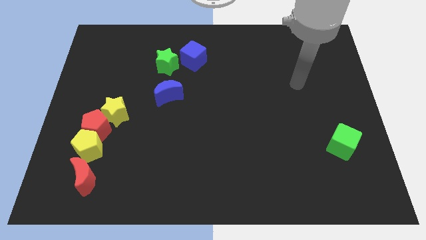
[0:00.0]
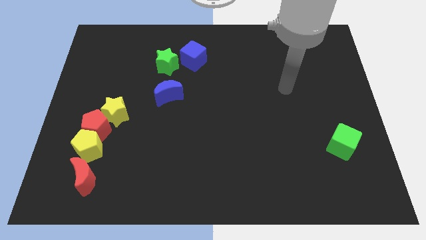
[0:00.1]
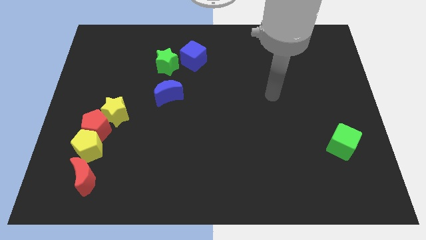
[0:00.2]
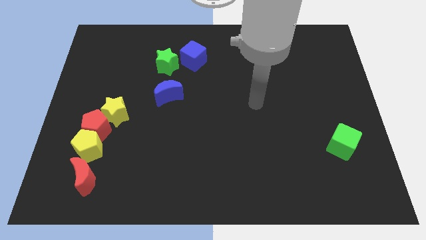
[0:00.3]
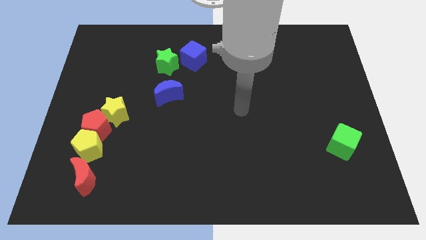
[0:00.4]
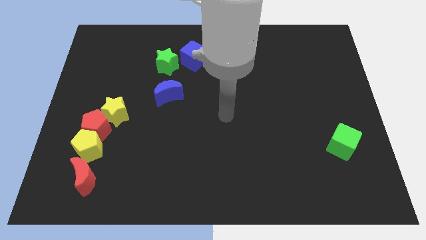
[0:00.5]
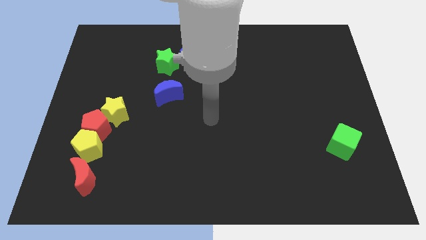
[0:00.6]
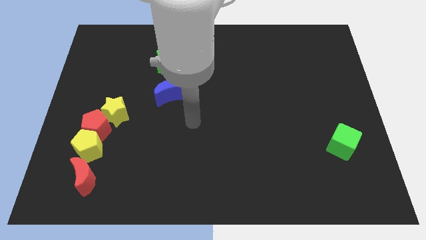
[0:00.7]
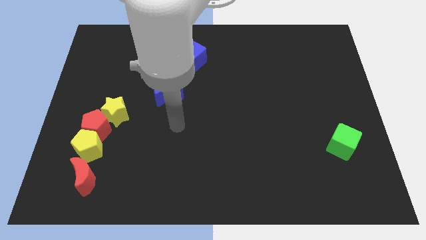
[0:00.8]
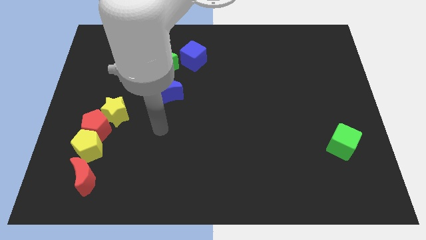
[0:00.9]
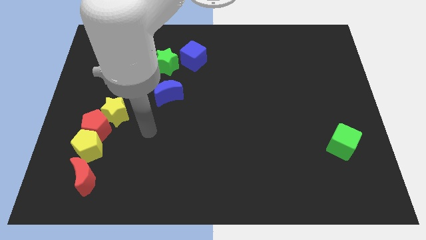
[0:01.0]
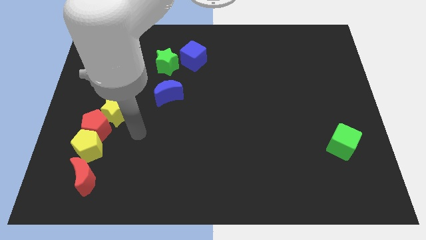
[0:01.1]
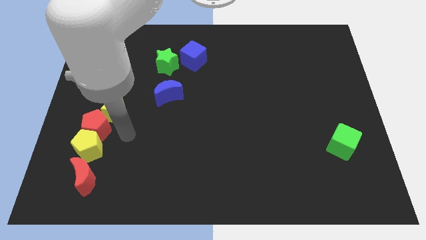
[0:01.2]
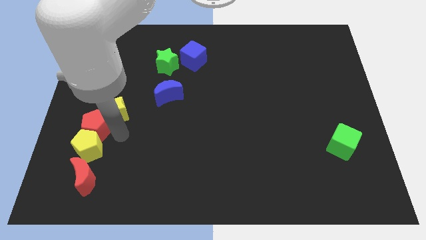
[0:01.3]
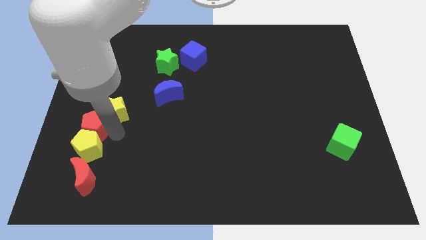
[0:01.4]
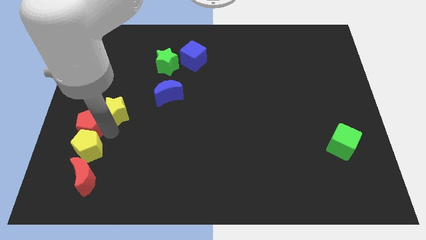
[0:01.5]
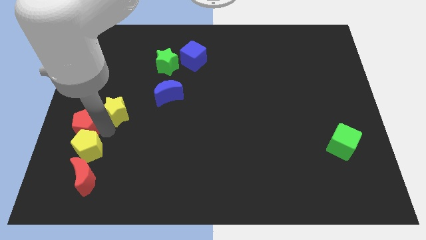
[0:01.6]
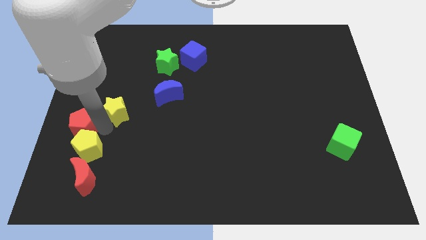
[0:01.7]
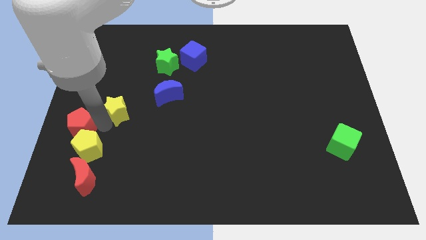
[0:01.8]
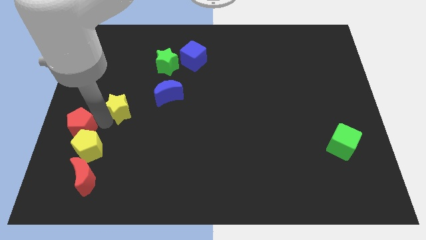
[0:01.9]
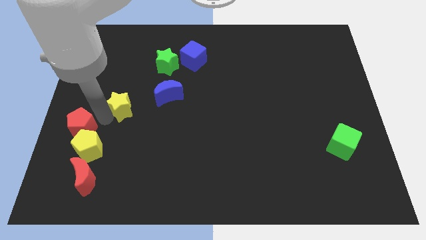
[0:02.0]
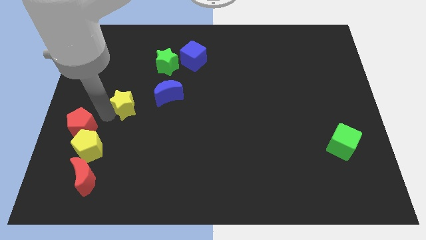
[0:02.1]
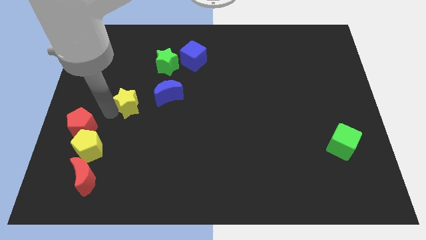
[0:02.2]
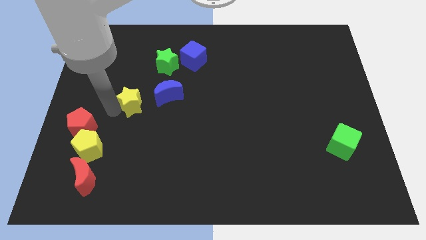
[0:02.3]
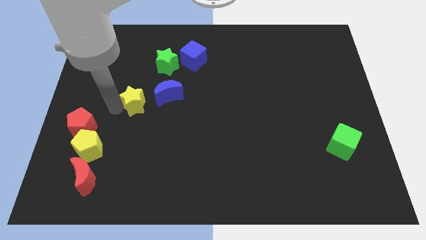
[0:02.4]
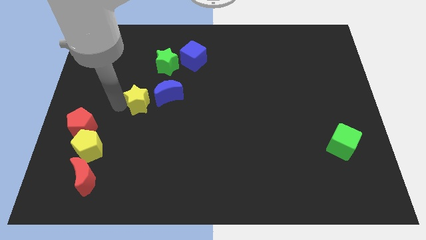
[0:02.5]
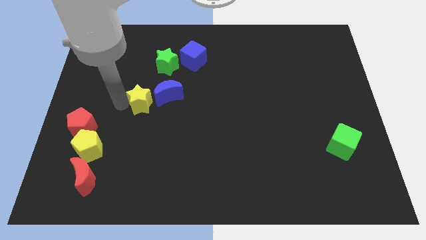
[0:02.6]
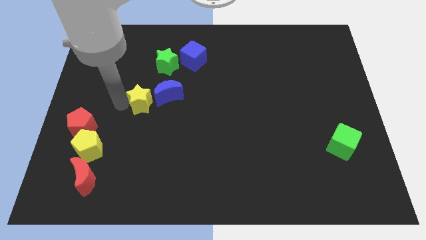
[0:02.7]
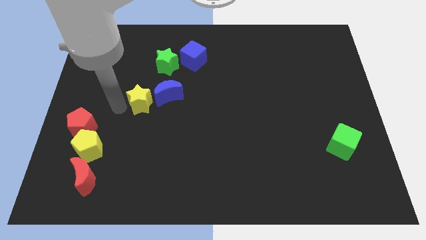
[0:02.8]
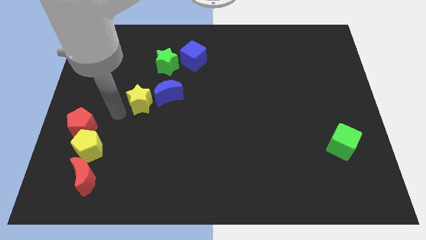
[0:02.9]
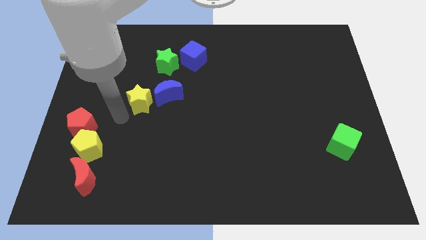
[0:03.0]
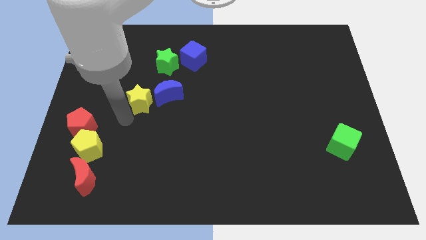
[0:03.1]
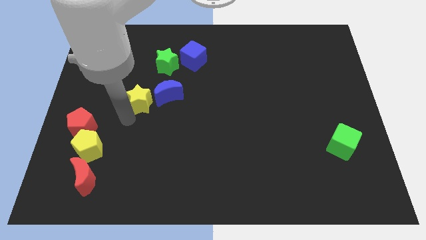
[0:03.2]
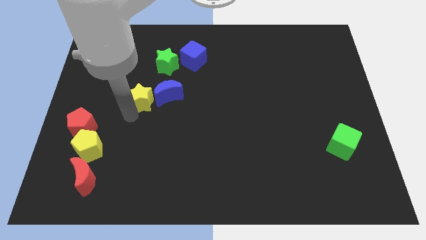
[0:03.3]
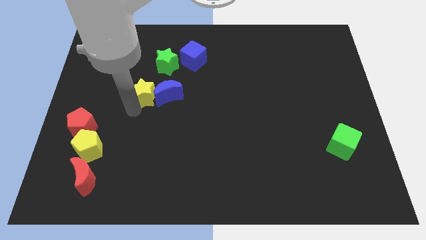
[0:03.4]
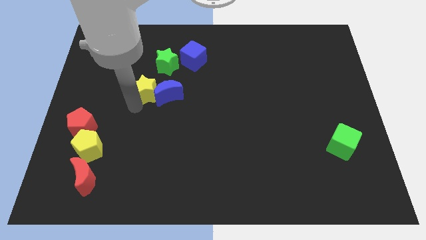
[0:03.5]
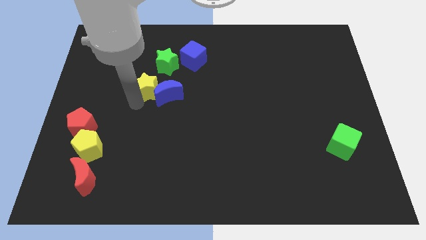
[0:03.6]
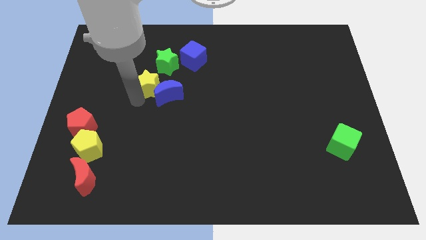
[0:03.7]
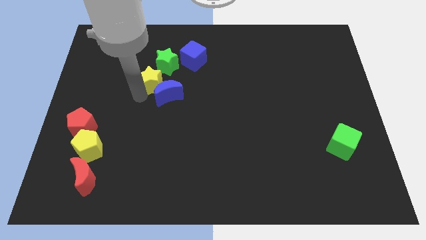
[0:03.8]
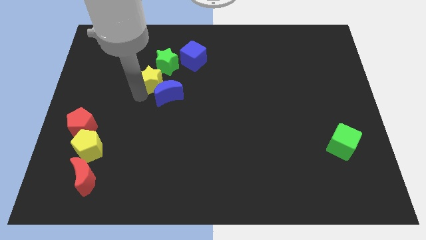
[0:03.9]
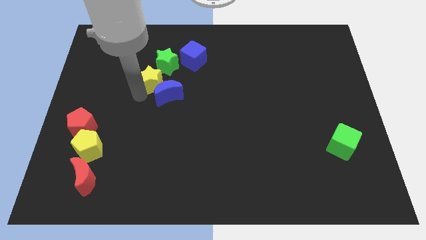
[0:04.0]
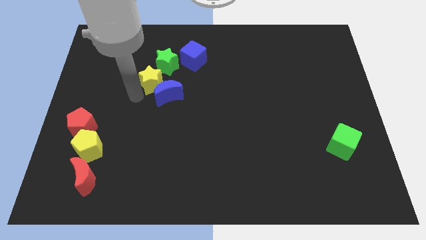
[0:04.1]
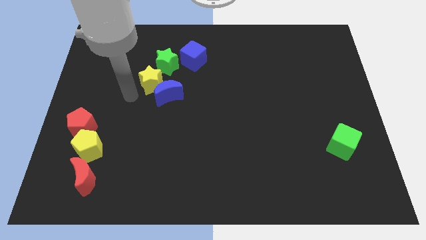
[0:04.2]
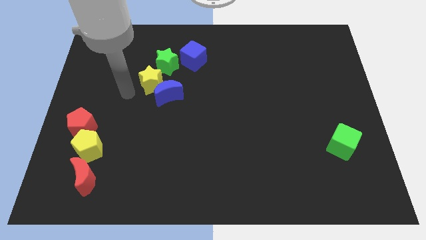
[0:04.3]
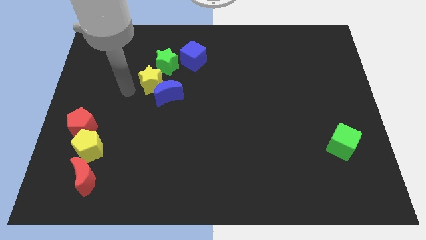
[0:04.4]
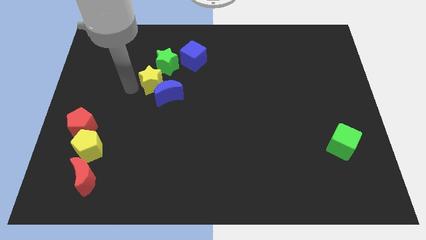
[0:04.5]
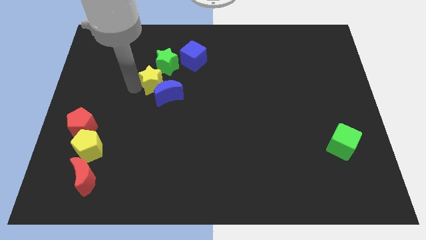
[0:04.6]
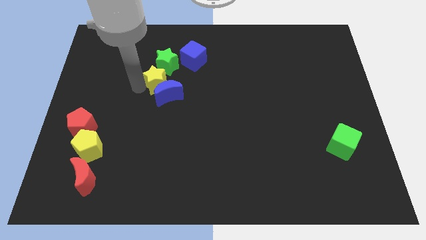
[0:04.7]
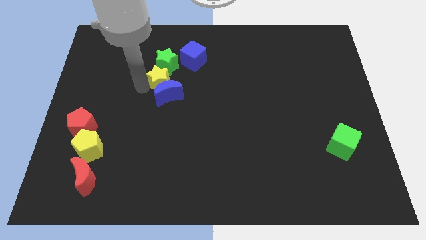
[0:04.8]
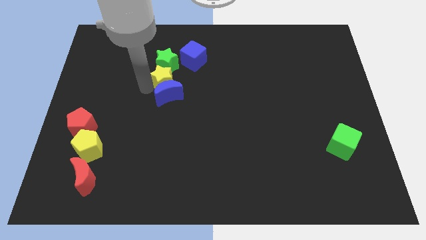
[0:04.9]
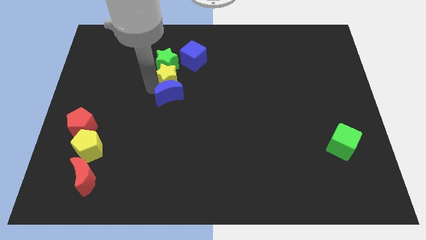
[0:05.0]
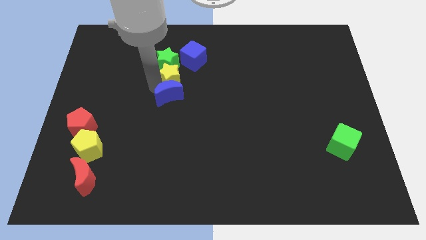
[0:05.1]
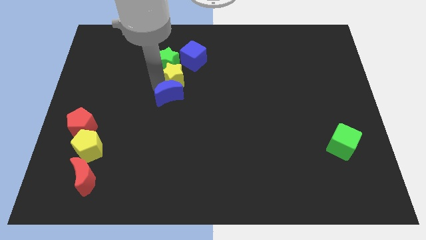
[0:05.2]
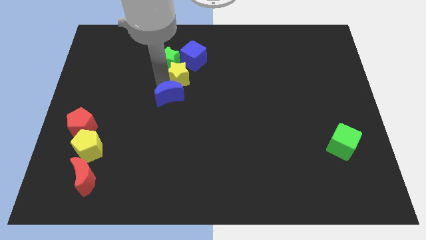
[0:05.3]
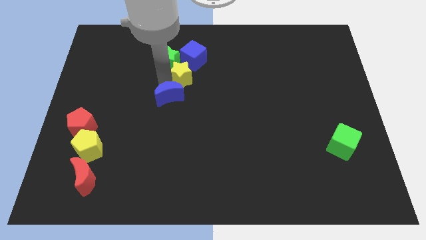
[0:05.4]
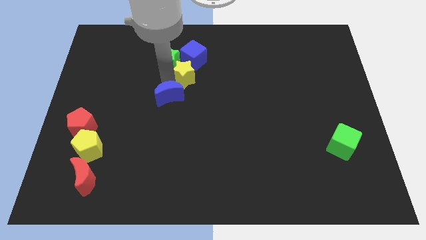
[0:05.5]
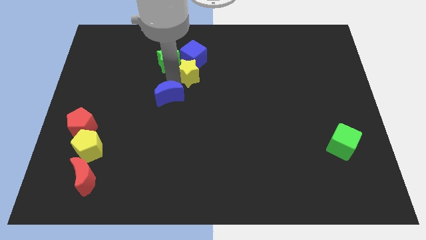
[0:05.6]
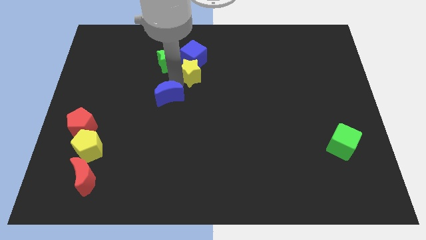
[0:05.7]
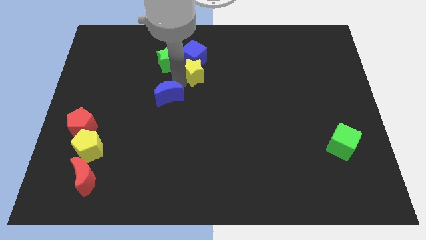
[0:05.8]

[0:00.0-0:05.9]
slide the yellow star close to the blue cube

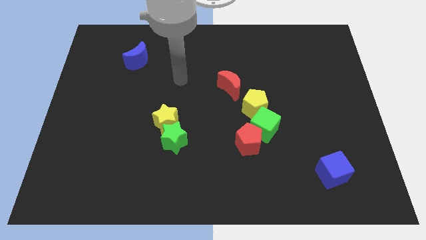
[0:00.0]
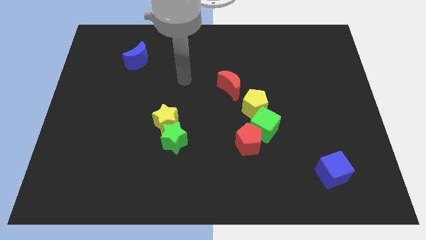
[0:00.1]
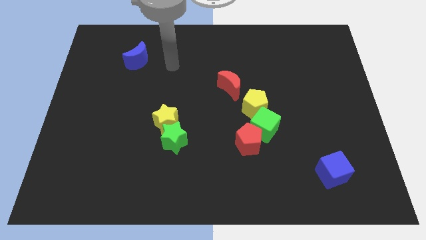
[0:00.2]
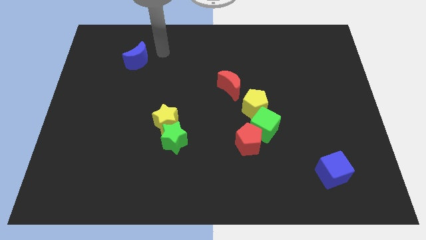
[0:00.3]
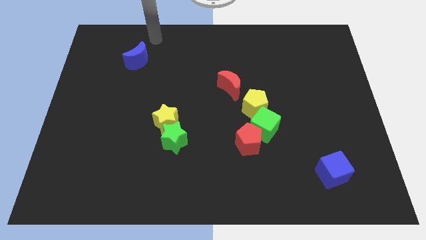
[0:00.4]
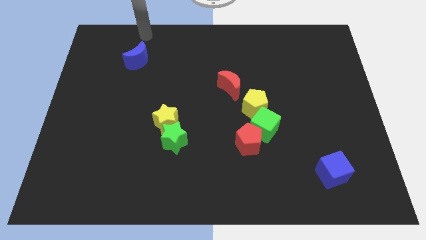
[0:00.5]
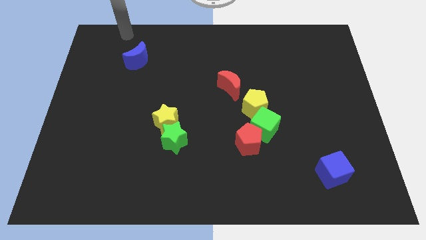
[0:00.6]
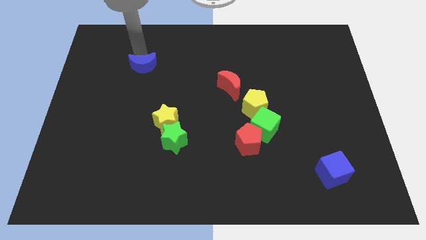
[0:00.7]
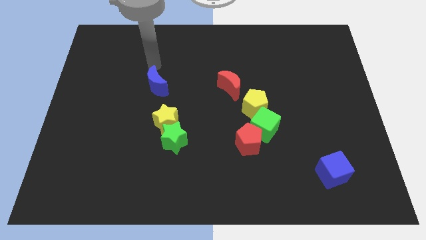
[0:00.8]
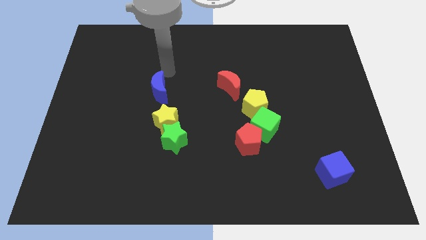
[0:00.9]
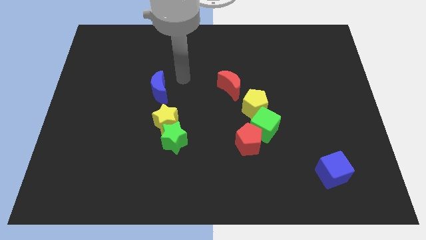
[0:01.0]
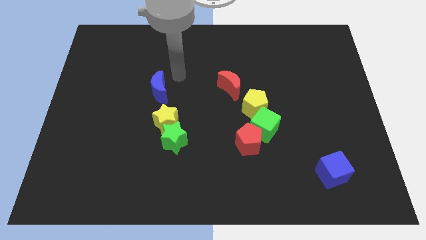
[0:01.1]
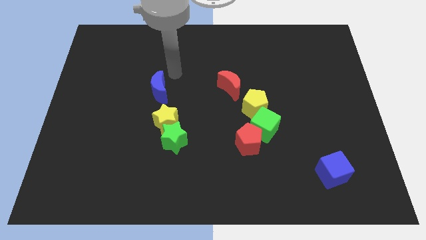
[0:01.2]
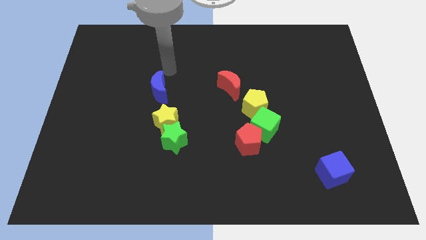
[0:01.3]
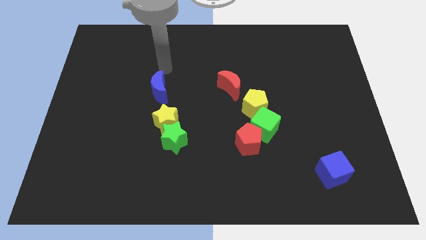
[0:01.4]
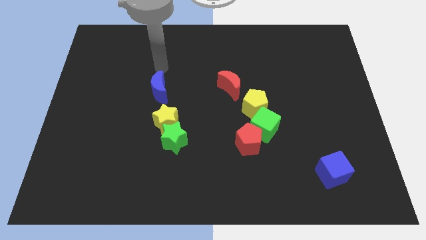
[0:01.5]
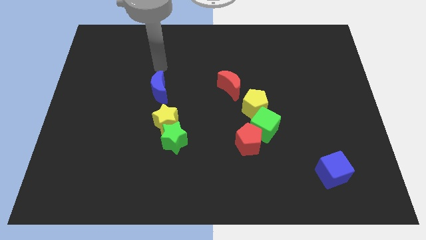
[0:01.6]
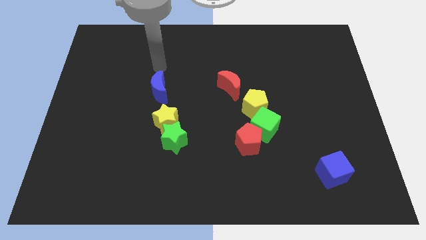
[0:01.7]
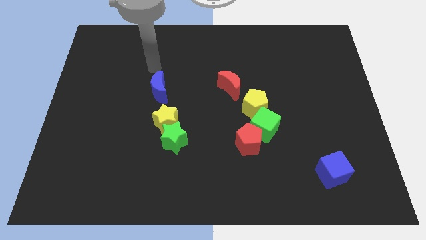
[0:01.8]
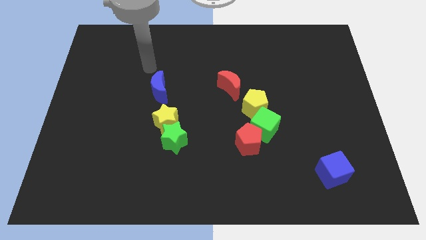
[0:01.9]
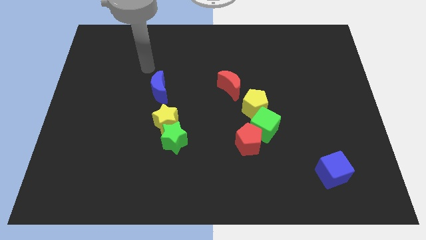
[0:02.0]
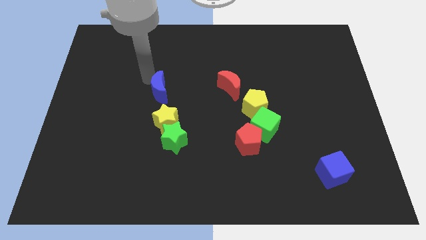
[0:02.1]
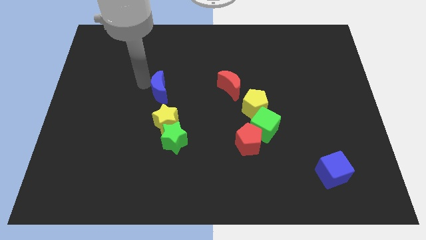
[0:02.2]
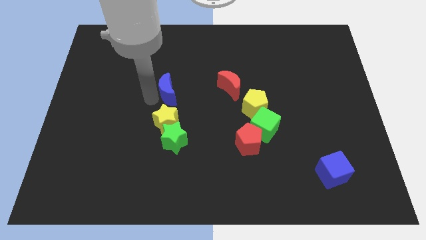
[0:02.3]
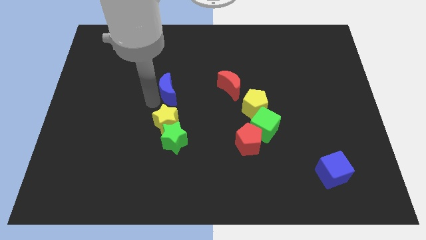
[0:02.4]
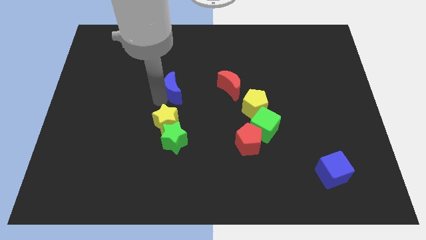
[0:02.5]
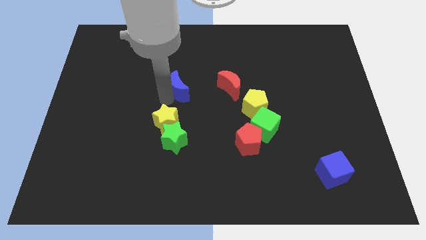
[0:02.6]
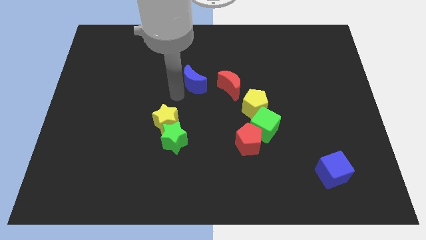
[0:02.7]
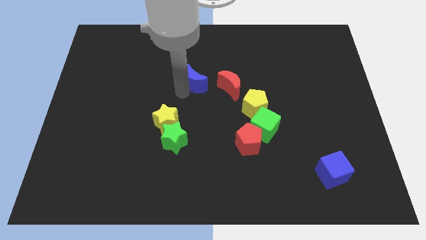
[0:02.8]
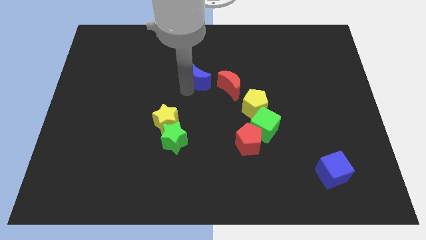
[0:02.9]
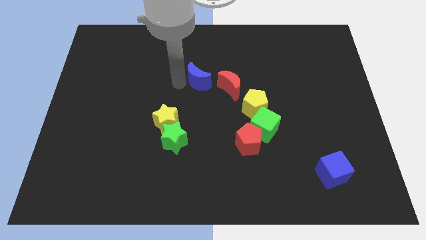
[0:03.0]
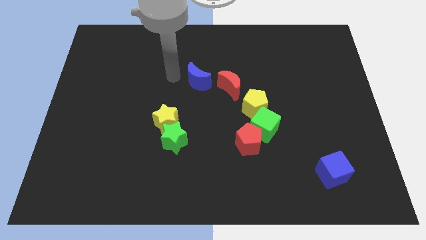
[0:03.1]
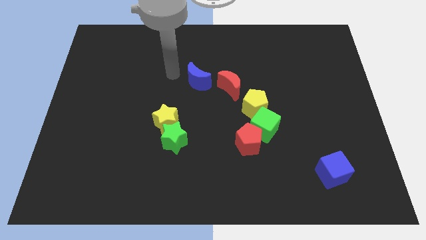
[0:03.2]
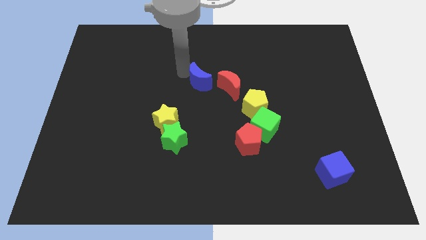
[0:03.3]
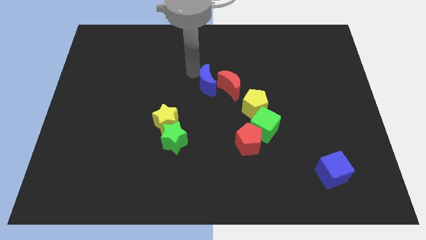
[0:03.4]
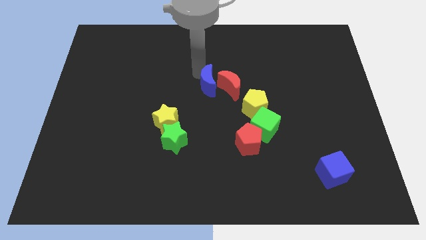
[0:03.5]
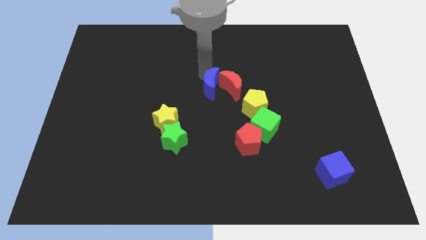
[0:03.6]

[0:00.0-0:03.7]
put the blue moon towards the red moon
